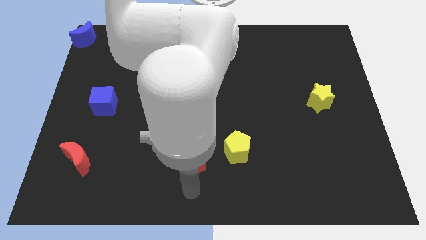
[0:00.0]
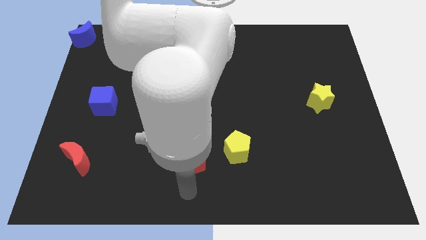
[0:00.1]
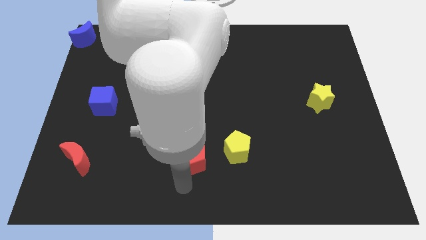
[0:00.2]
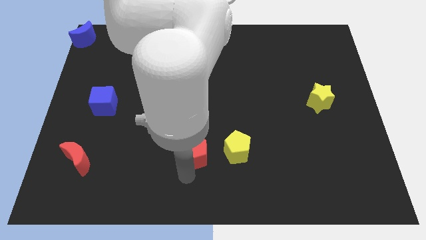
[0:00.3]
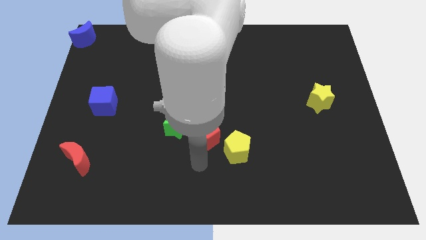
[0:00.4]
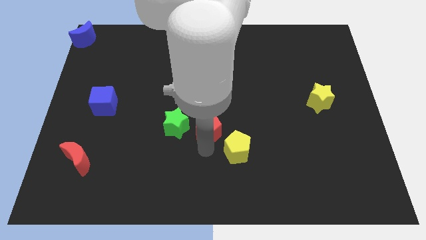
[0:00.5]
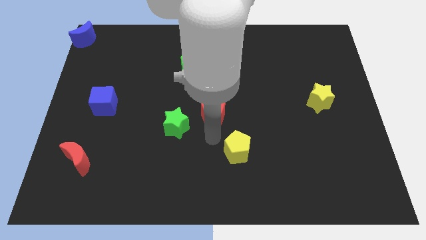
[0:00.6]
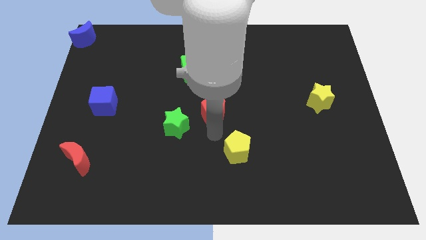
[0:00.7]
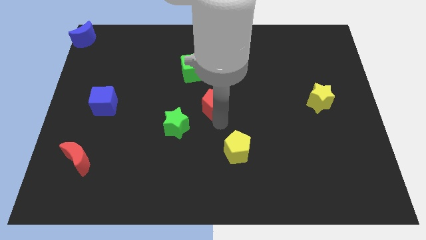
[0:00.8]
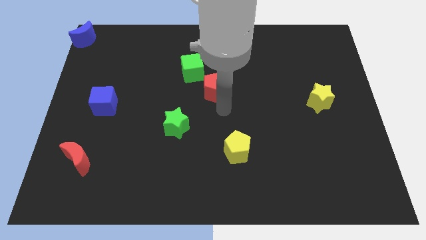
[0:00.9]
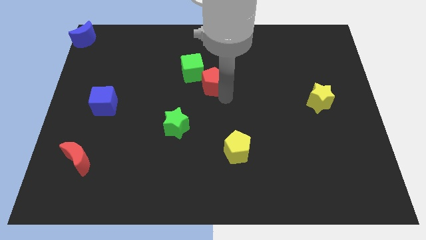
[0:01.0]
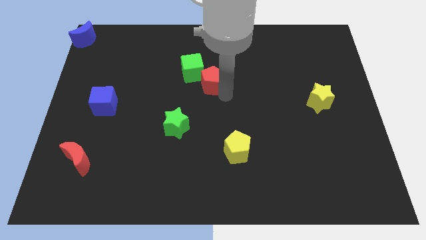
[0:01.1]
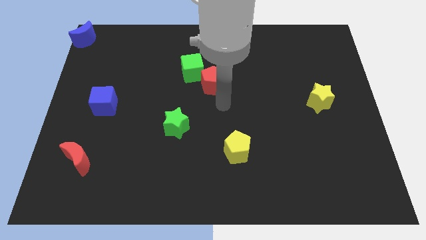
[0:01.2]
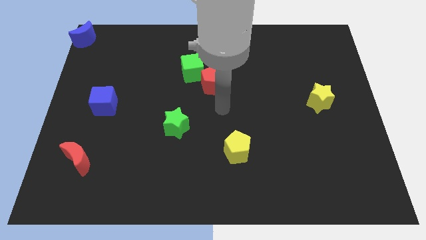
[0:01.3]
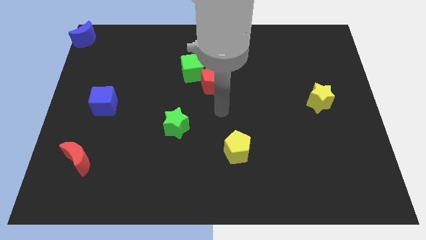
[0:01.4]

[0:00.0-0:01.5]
move red pentagon towards the green cube

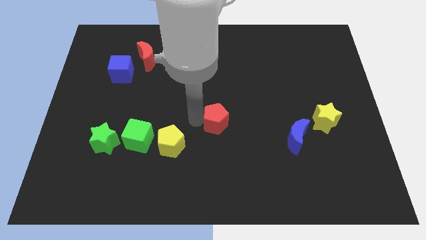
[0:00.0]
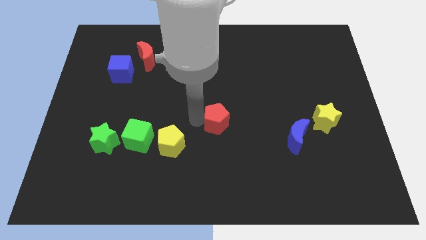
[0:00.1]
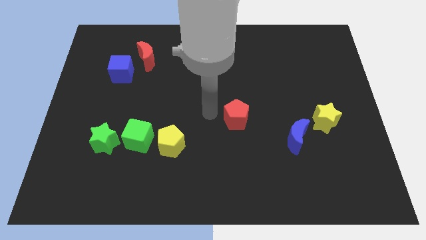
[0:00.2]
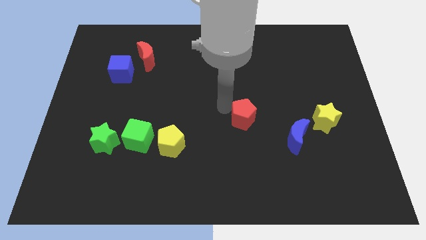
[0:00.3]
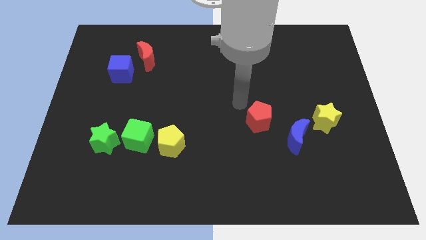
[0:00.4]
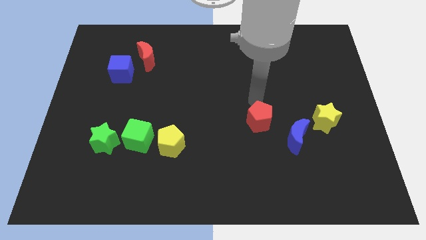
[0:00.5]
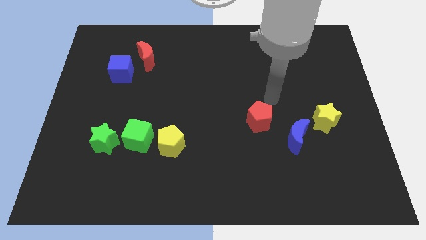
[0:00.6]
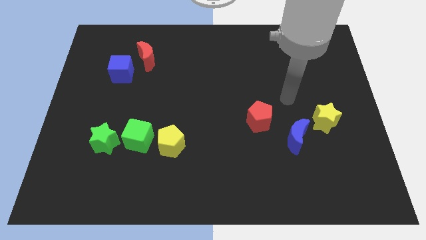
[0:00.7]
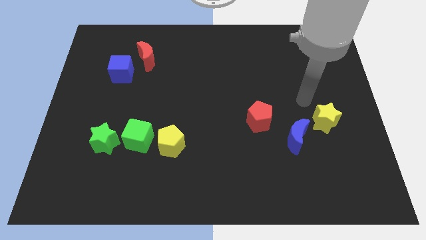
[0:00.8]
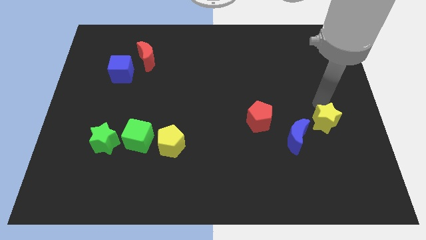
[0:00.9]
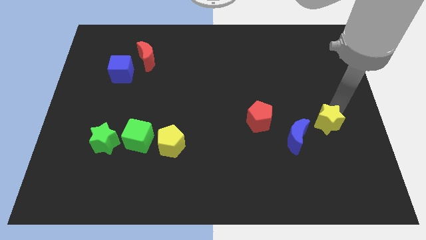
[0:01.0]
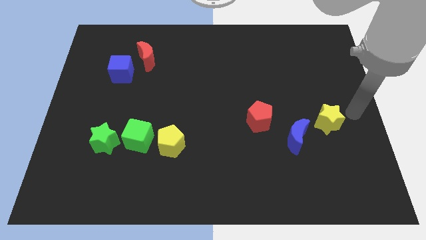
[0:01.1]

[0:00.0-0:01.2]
move the red pentagon diagonally on the top left side of the blue crescent

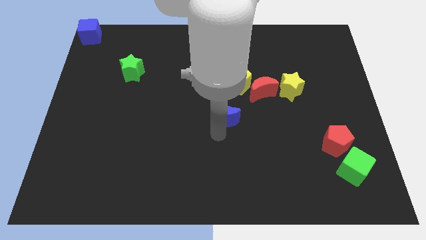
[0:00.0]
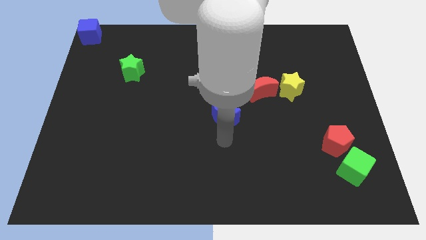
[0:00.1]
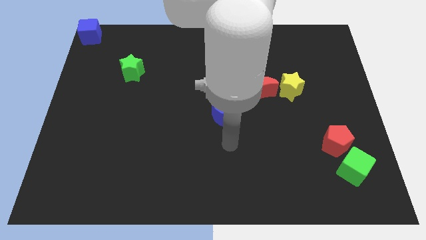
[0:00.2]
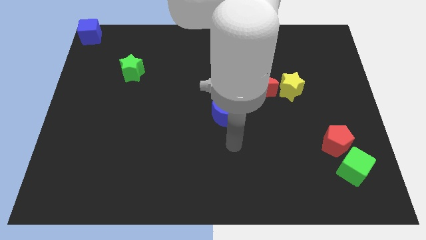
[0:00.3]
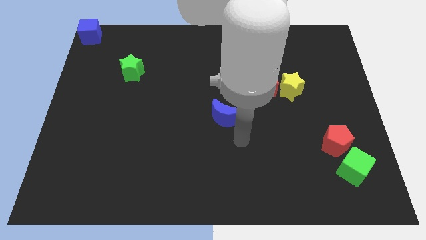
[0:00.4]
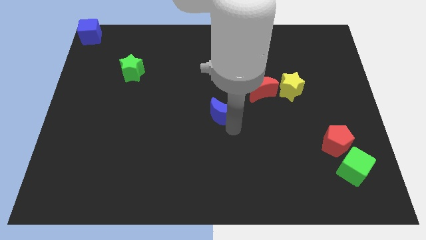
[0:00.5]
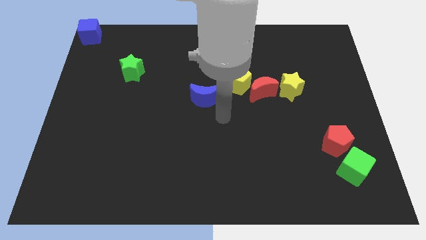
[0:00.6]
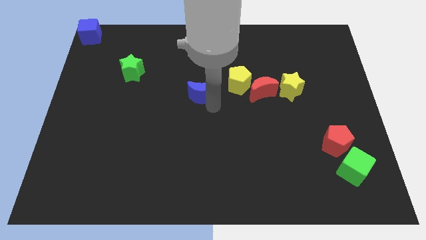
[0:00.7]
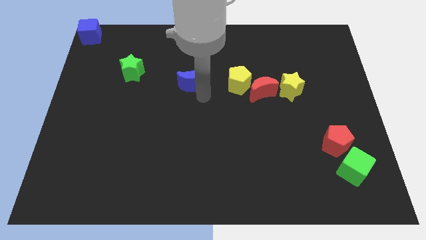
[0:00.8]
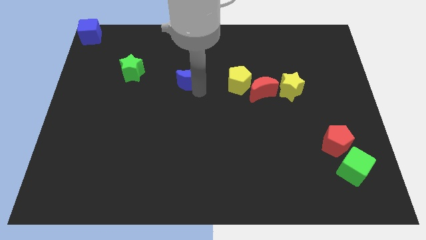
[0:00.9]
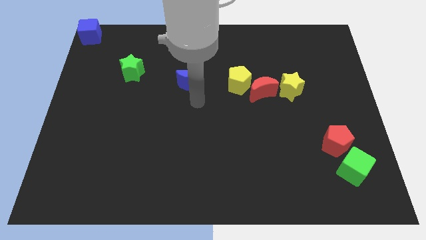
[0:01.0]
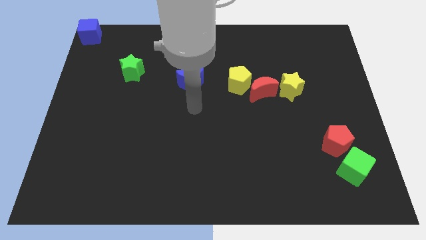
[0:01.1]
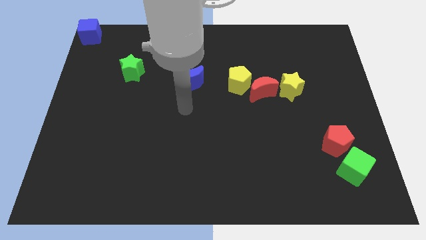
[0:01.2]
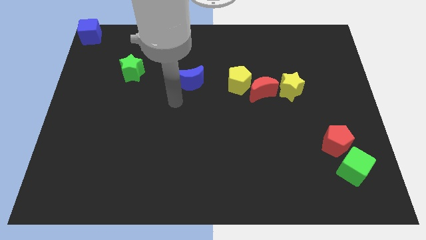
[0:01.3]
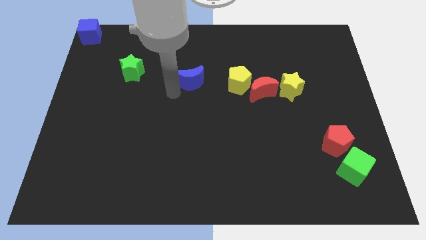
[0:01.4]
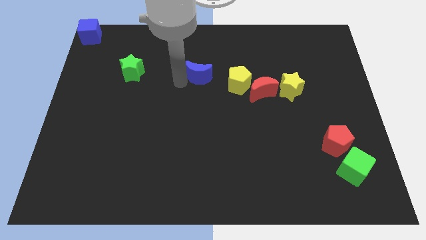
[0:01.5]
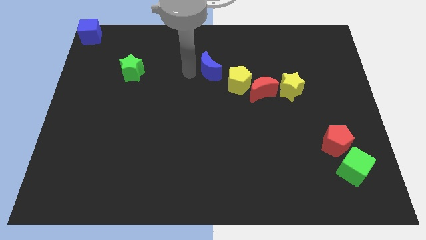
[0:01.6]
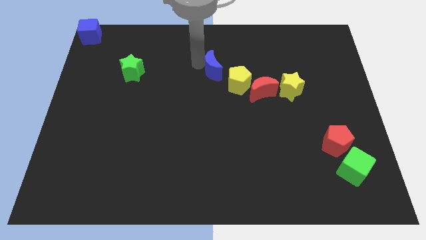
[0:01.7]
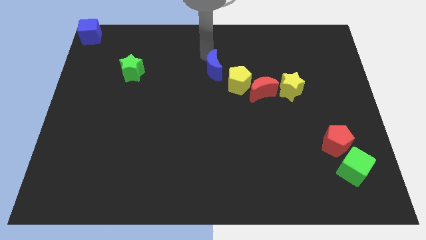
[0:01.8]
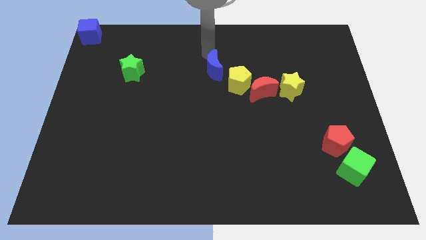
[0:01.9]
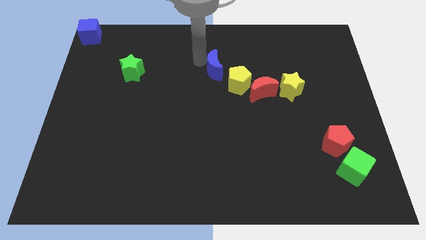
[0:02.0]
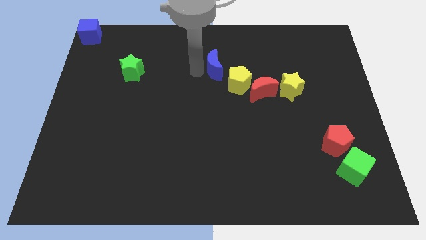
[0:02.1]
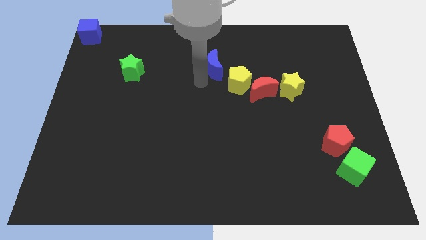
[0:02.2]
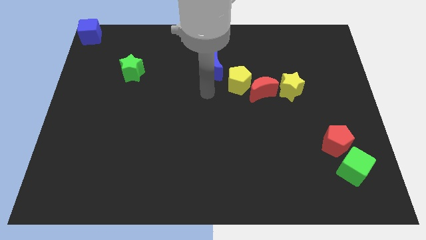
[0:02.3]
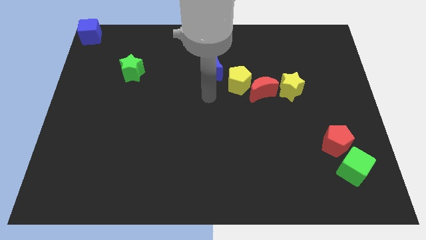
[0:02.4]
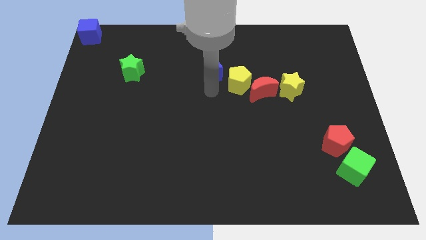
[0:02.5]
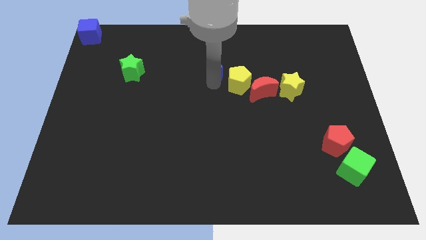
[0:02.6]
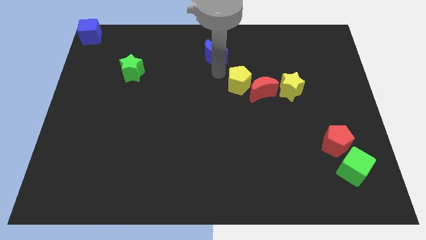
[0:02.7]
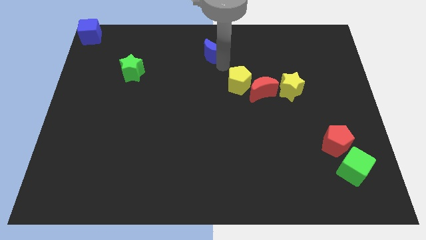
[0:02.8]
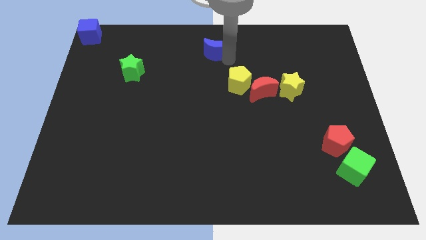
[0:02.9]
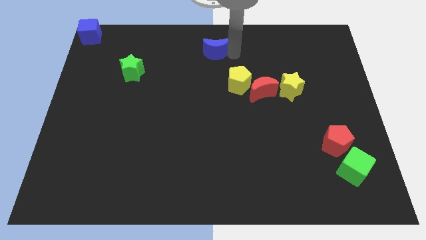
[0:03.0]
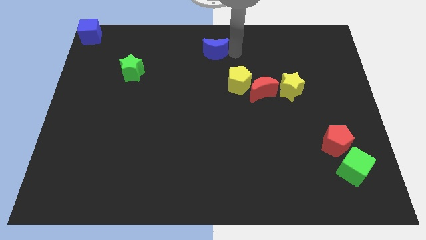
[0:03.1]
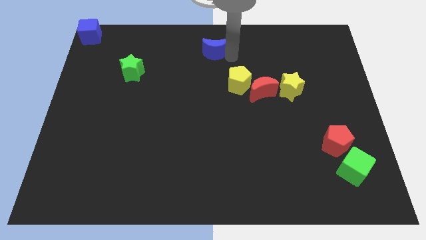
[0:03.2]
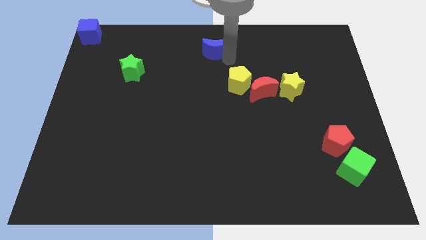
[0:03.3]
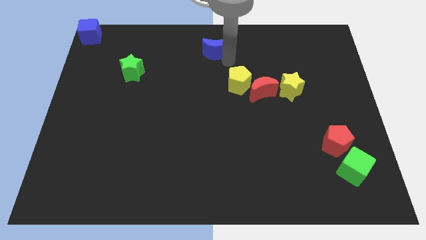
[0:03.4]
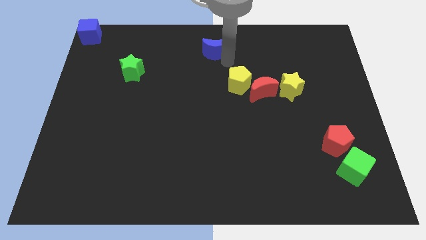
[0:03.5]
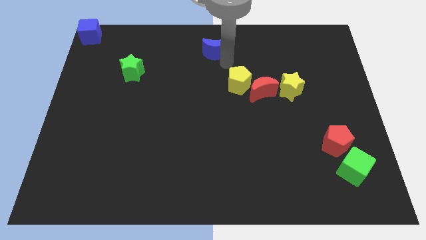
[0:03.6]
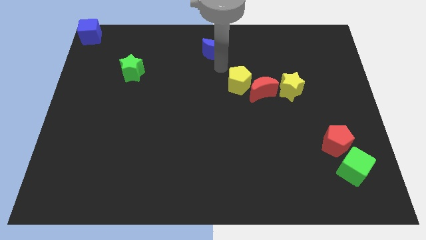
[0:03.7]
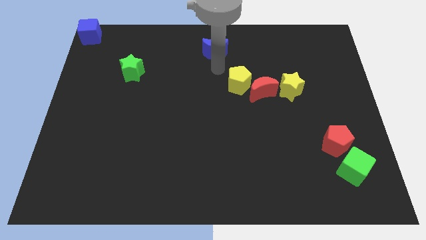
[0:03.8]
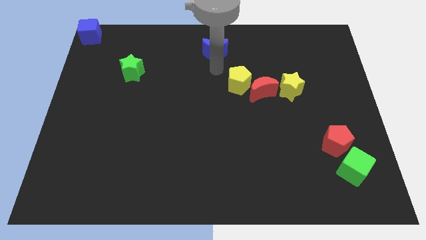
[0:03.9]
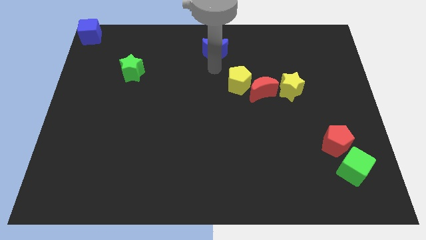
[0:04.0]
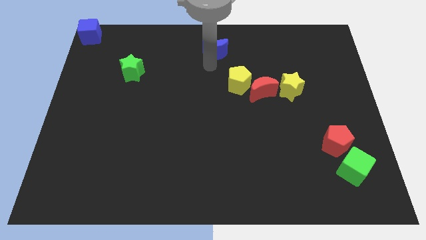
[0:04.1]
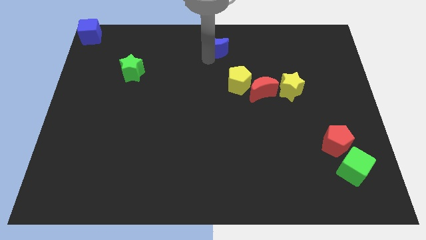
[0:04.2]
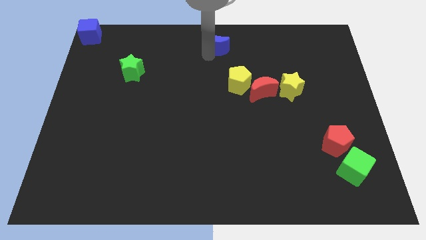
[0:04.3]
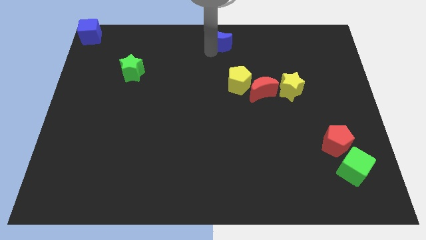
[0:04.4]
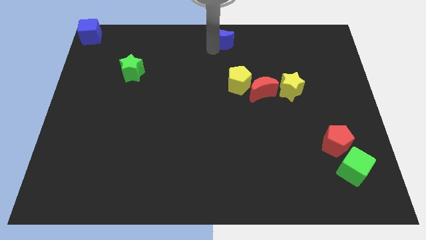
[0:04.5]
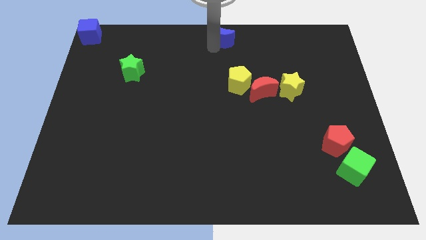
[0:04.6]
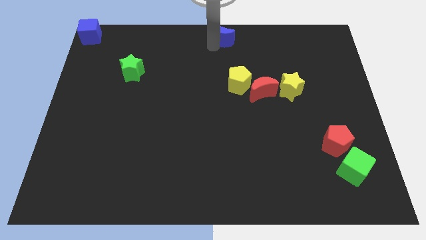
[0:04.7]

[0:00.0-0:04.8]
move the blue moon to the top center

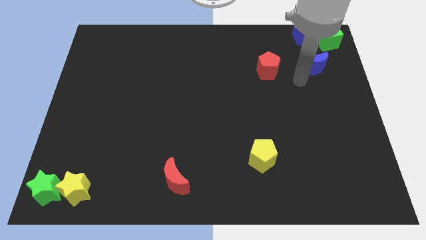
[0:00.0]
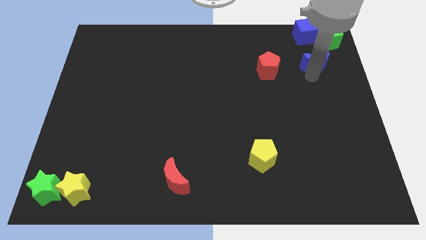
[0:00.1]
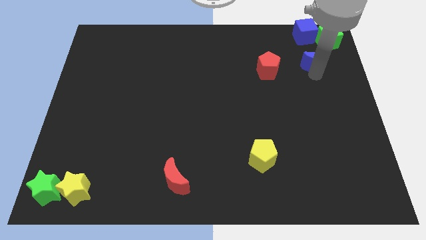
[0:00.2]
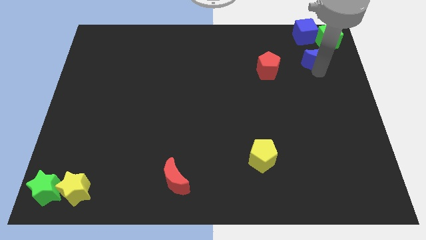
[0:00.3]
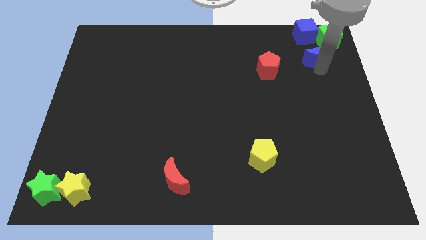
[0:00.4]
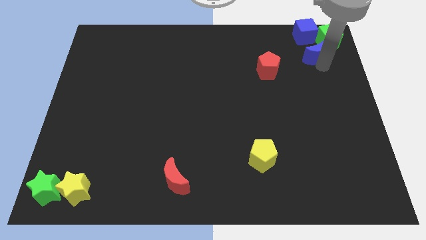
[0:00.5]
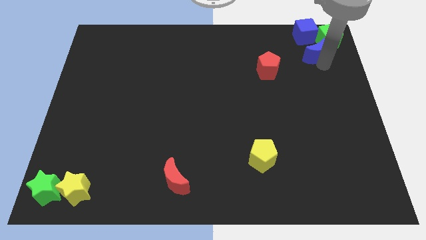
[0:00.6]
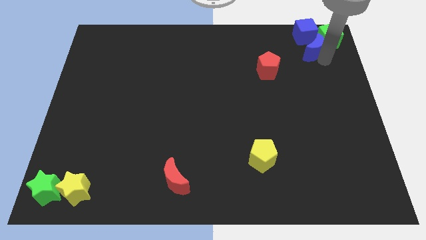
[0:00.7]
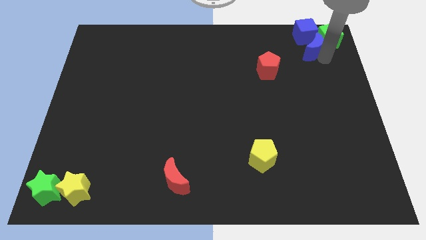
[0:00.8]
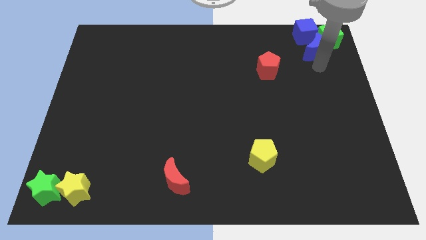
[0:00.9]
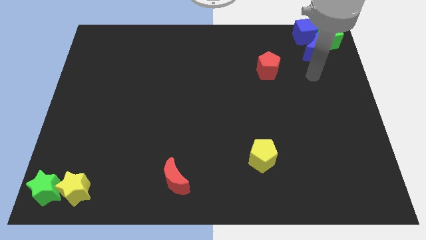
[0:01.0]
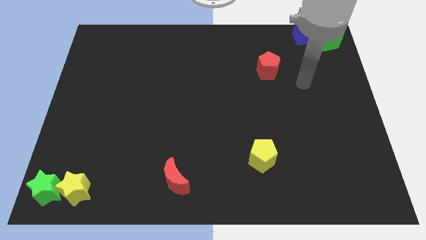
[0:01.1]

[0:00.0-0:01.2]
put the blue moon below the blue cube

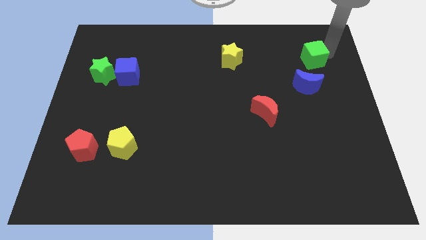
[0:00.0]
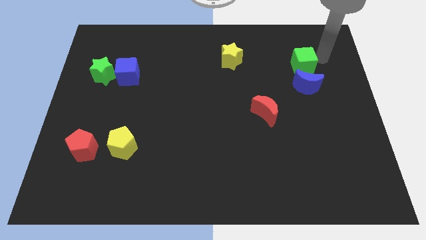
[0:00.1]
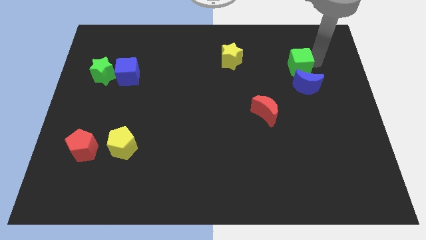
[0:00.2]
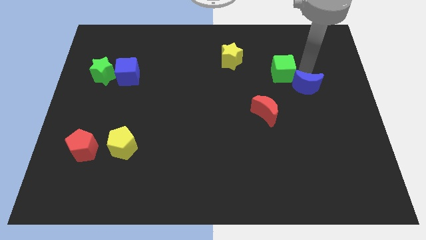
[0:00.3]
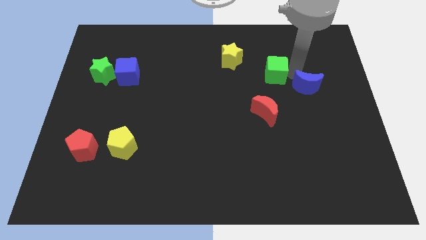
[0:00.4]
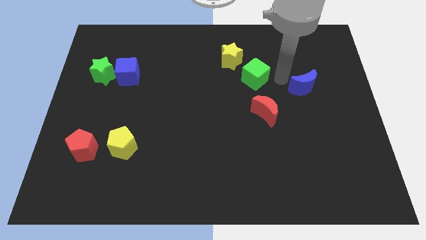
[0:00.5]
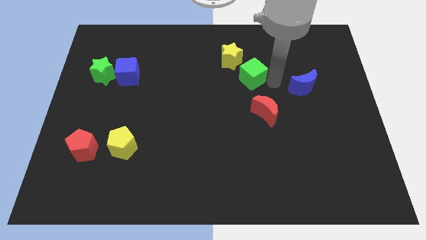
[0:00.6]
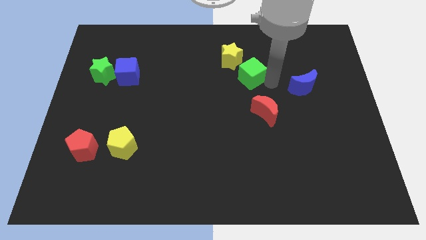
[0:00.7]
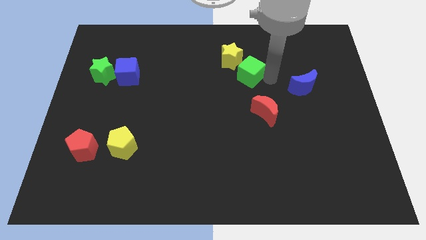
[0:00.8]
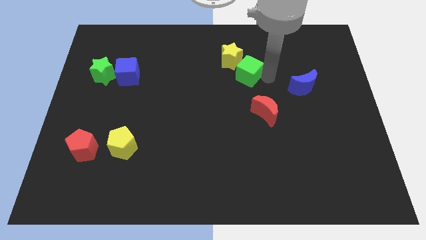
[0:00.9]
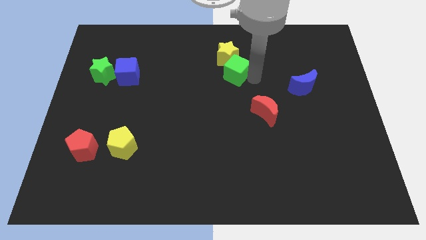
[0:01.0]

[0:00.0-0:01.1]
push the green cube in to yellow star
